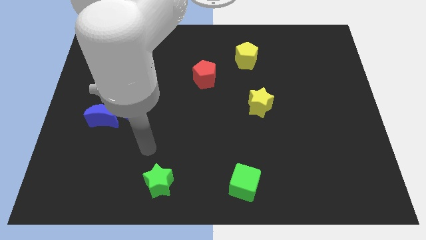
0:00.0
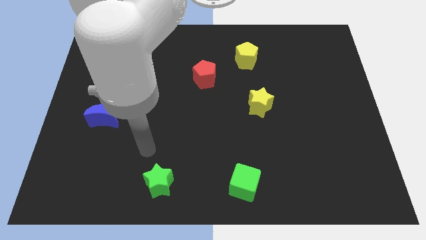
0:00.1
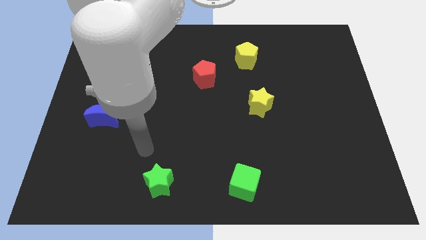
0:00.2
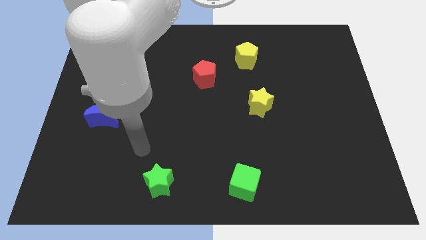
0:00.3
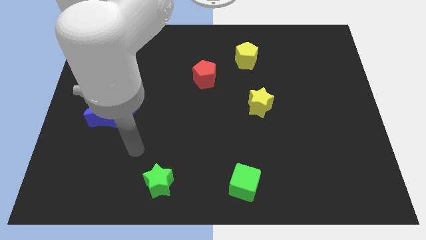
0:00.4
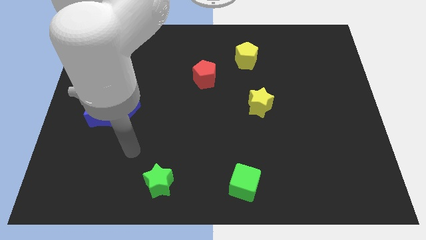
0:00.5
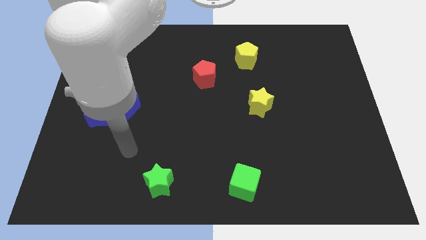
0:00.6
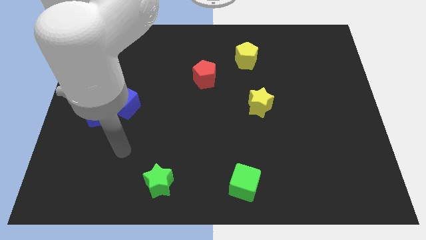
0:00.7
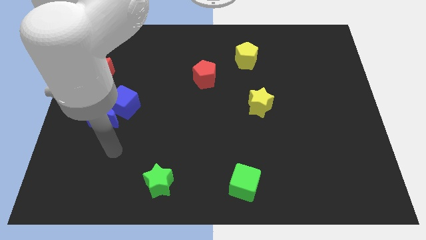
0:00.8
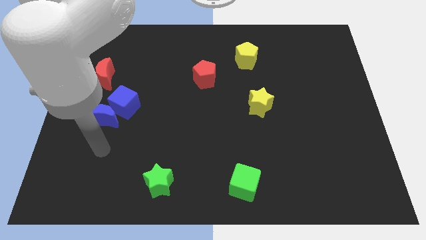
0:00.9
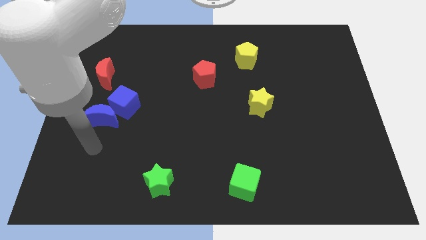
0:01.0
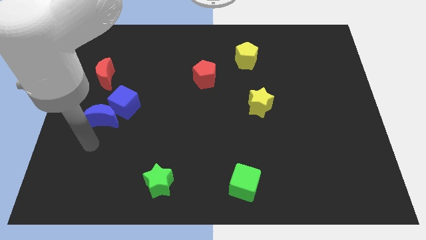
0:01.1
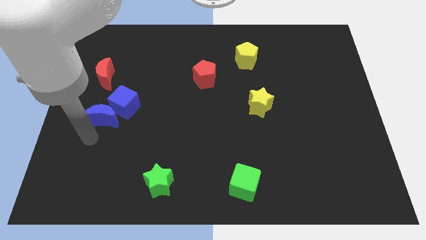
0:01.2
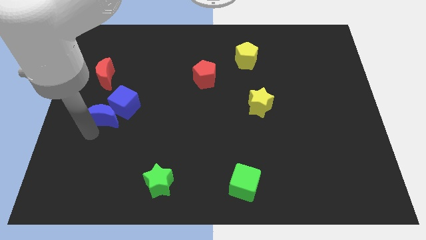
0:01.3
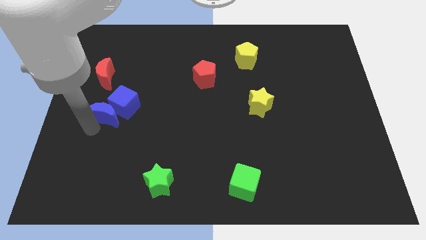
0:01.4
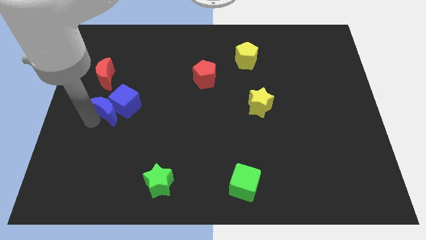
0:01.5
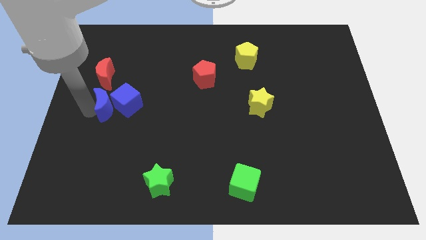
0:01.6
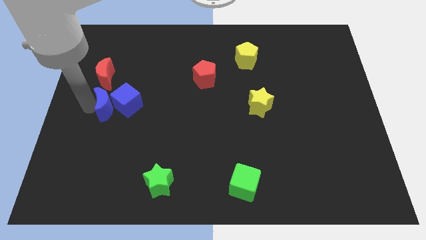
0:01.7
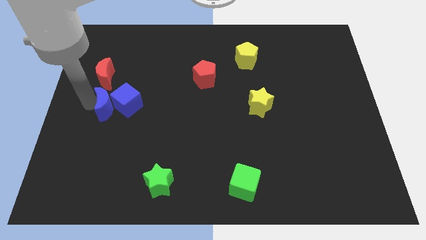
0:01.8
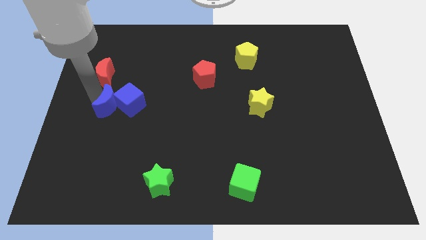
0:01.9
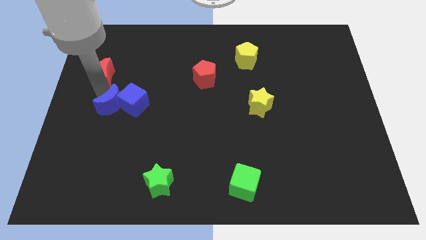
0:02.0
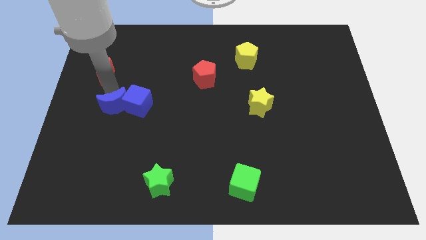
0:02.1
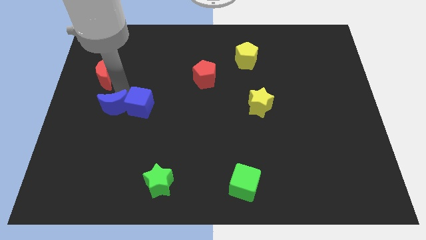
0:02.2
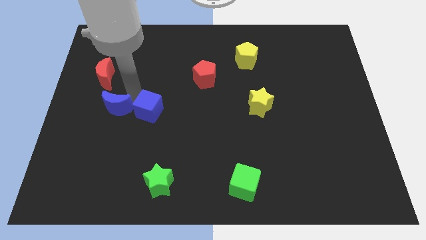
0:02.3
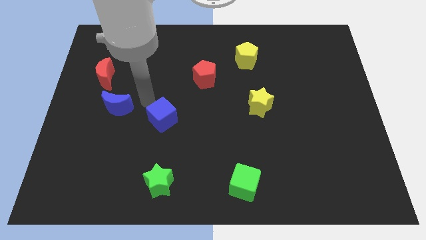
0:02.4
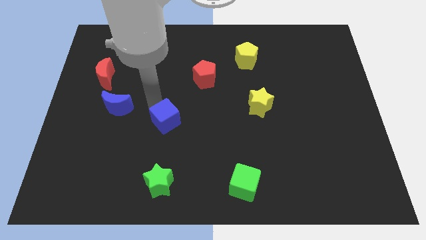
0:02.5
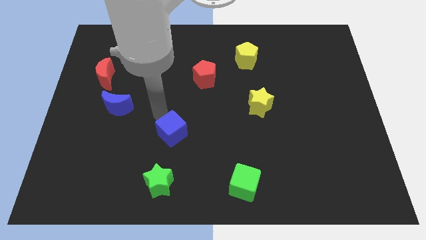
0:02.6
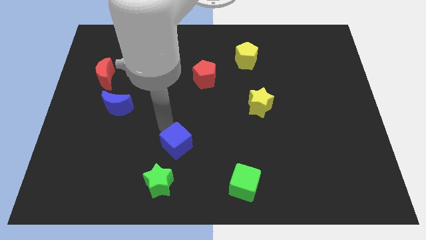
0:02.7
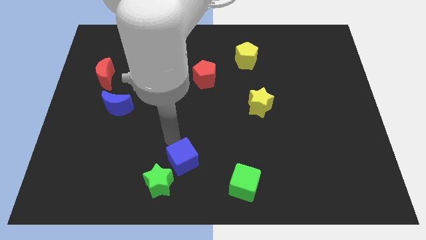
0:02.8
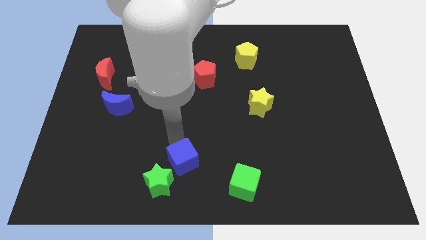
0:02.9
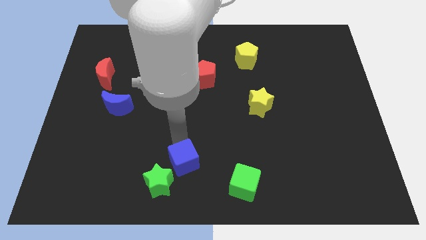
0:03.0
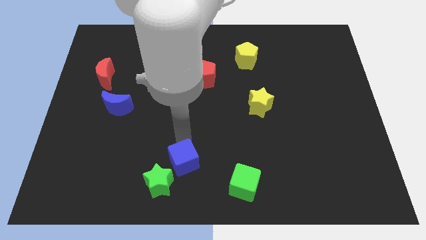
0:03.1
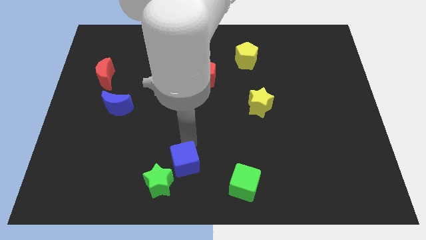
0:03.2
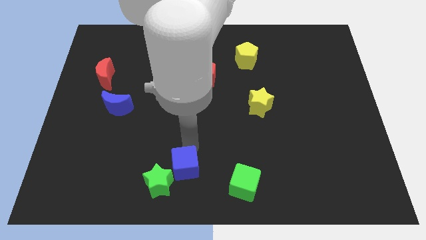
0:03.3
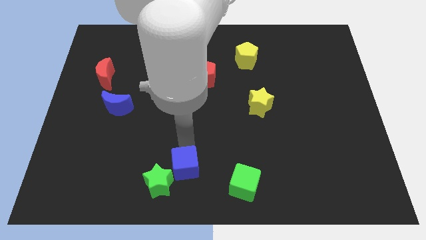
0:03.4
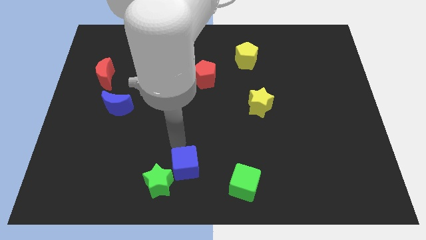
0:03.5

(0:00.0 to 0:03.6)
place the blue cube diagonal top right to green star

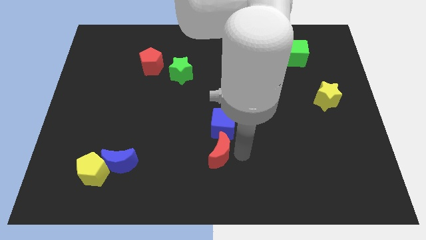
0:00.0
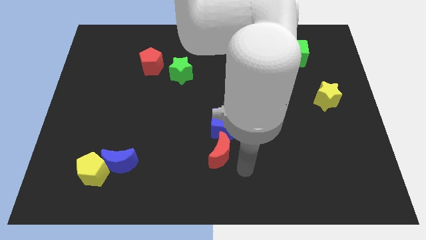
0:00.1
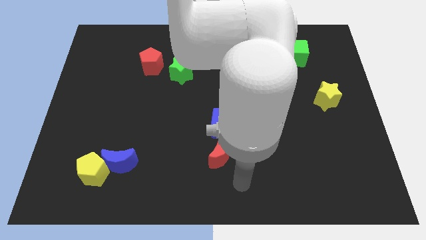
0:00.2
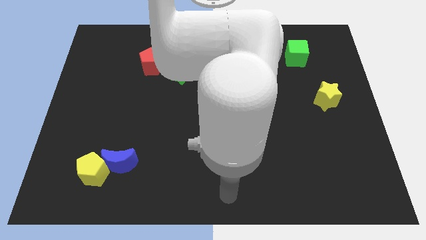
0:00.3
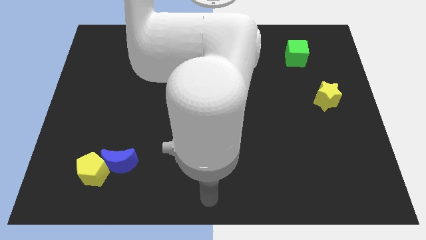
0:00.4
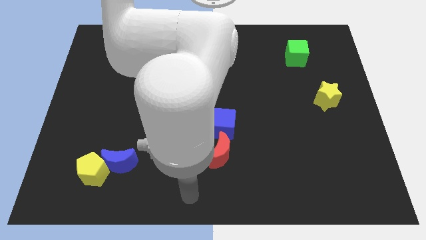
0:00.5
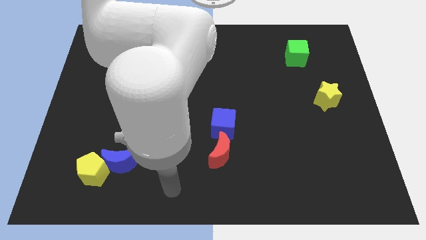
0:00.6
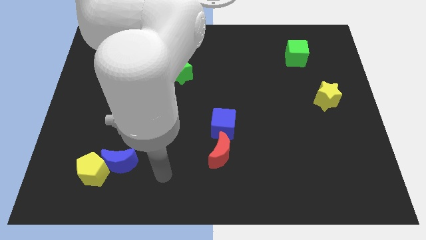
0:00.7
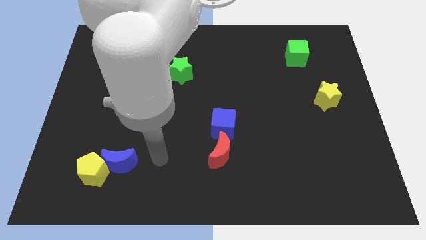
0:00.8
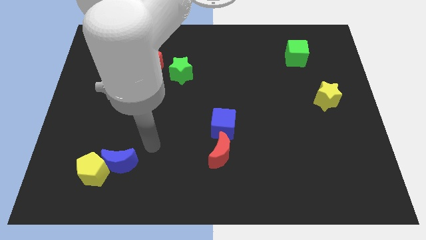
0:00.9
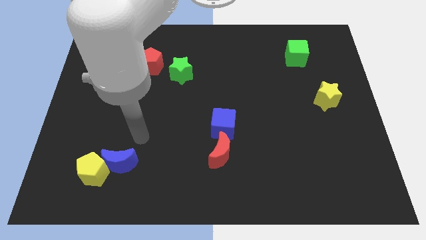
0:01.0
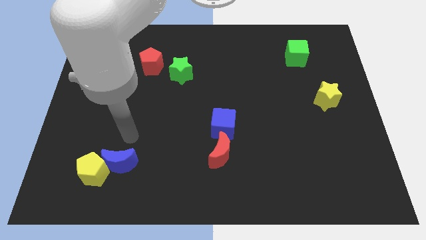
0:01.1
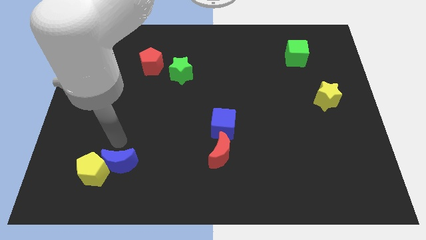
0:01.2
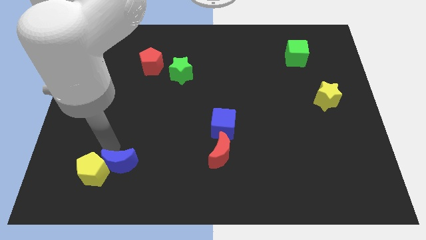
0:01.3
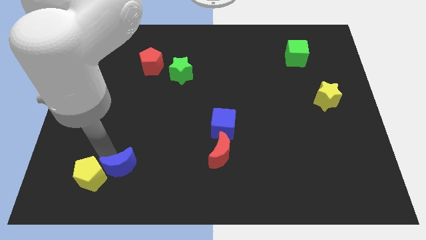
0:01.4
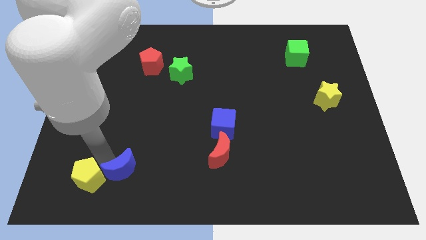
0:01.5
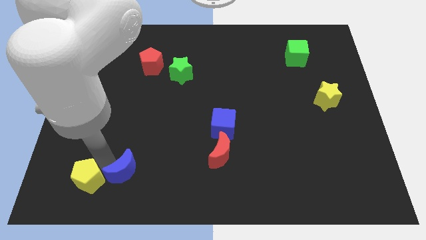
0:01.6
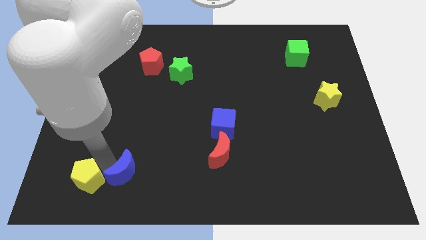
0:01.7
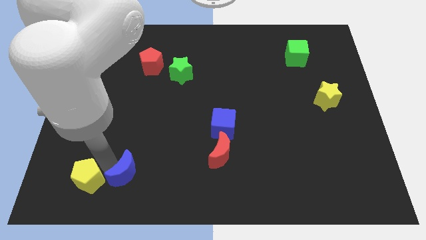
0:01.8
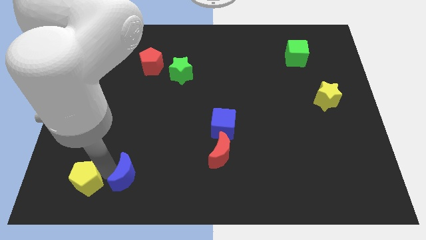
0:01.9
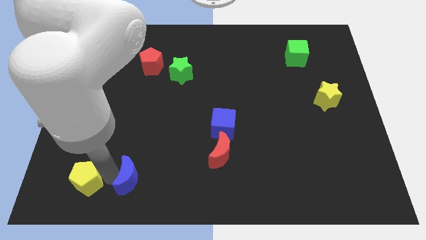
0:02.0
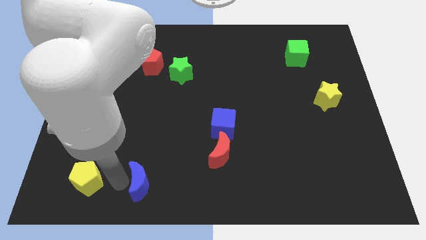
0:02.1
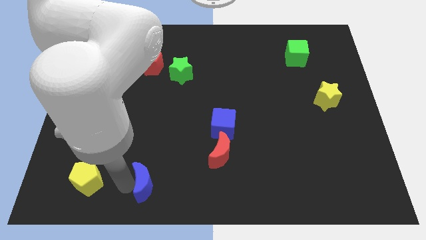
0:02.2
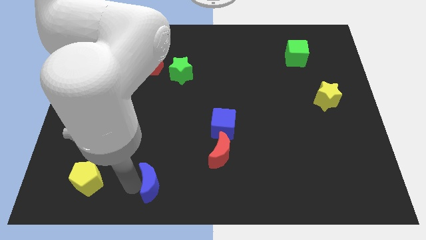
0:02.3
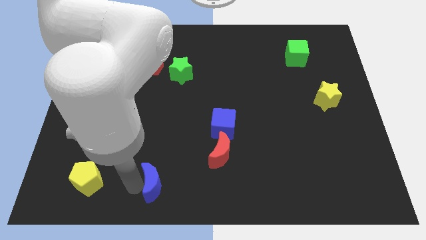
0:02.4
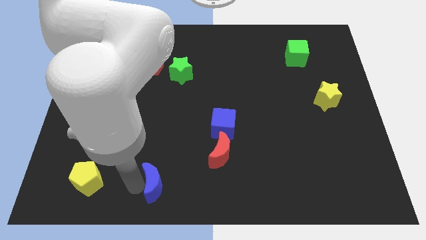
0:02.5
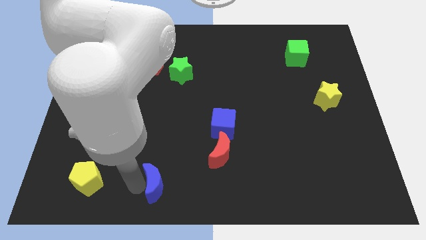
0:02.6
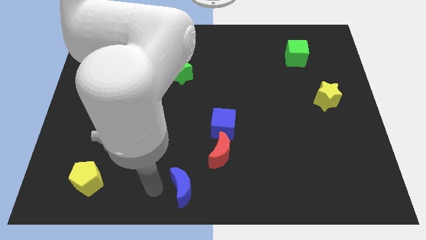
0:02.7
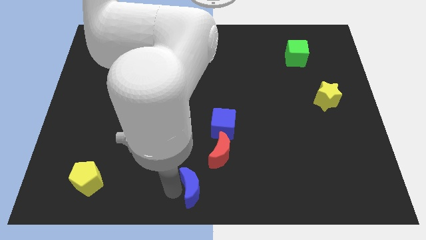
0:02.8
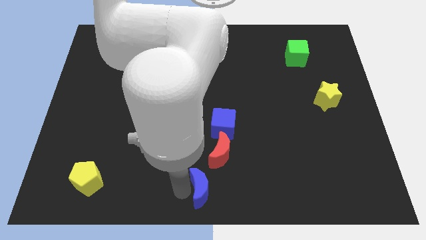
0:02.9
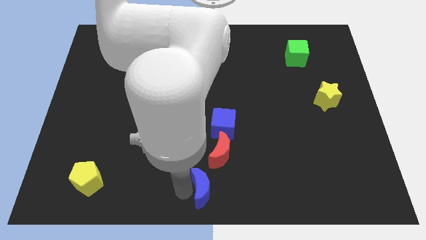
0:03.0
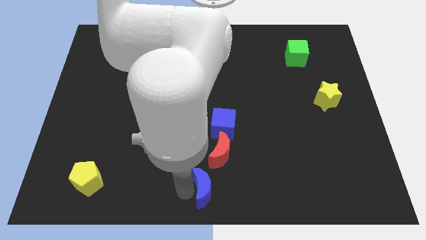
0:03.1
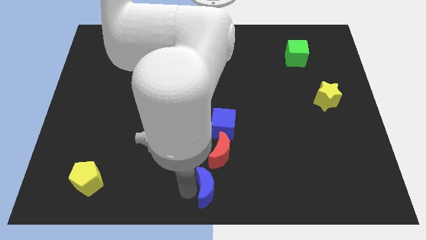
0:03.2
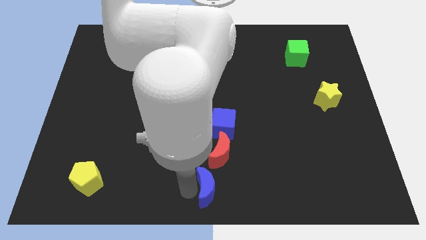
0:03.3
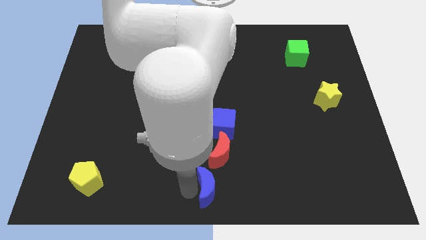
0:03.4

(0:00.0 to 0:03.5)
put the blue moon at the bottom center of the board

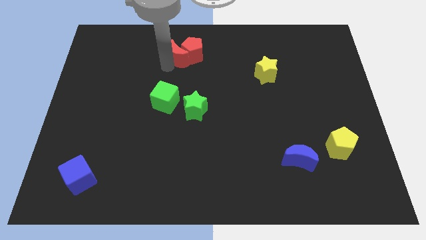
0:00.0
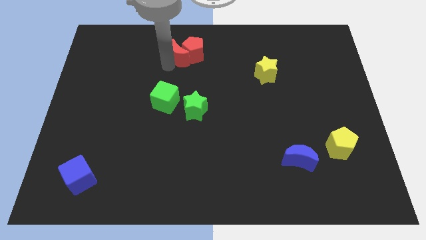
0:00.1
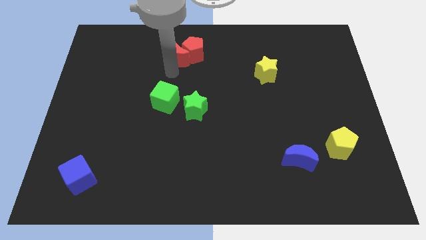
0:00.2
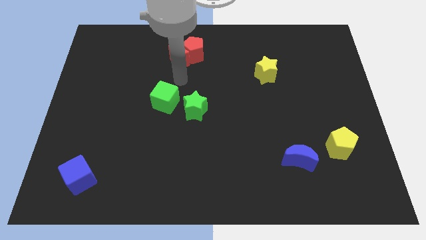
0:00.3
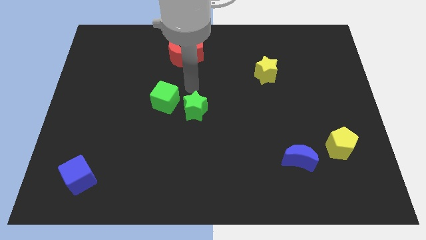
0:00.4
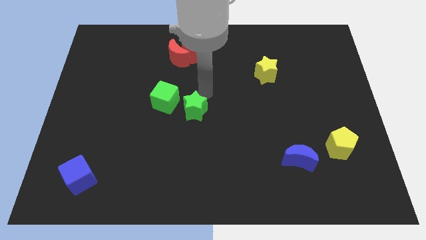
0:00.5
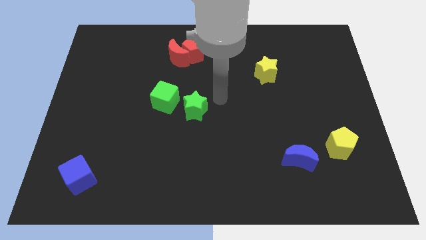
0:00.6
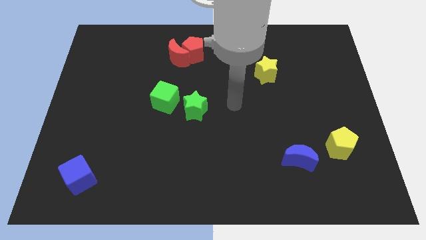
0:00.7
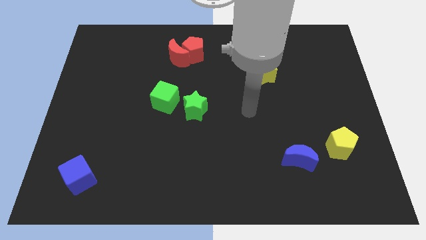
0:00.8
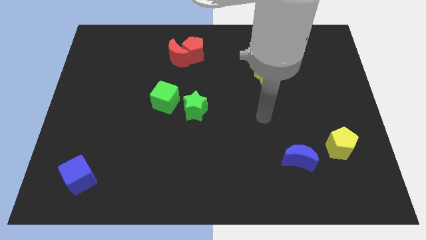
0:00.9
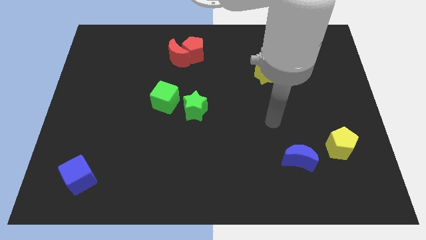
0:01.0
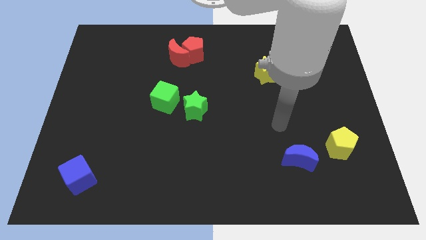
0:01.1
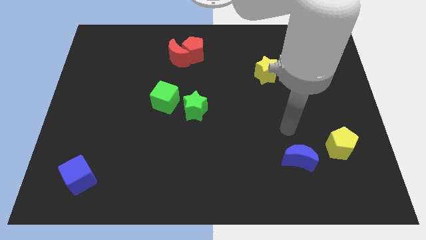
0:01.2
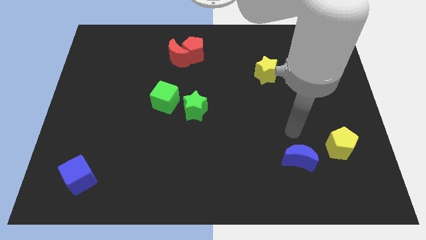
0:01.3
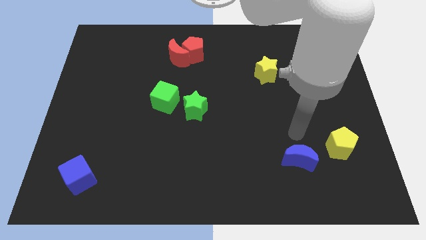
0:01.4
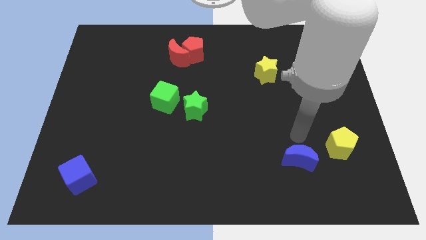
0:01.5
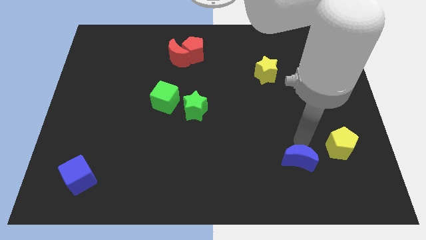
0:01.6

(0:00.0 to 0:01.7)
move arm to the top of blue crescent
